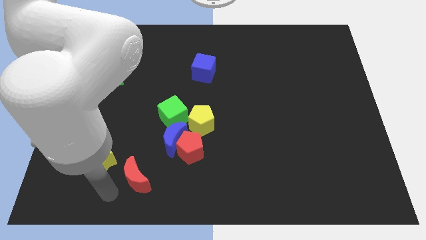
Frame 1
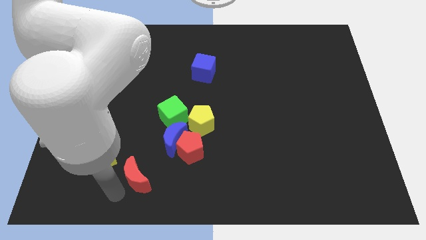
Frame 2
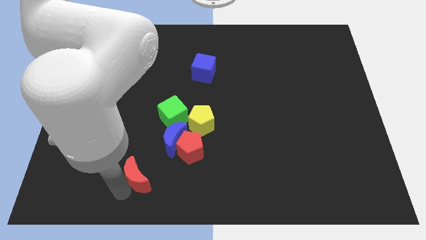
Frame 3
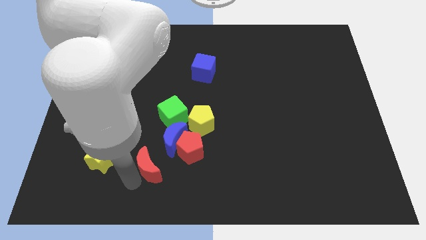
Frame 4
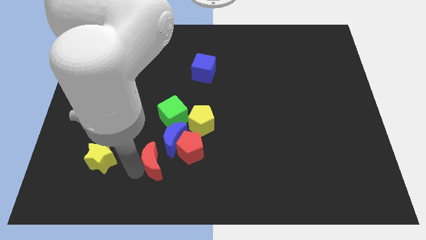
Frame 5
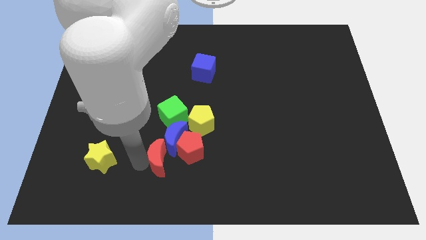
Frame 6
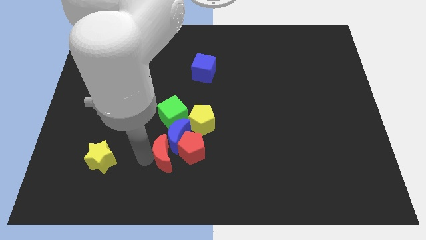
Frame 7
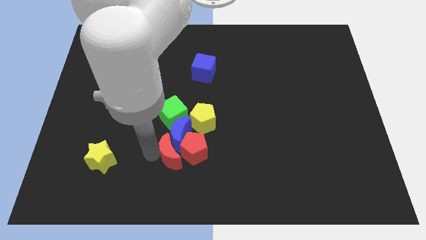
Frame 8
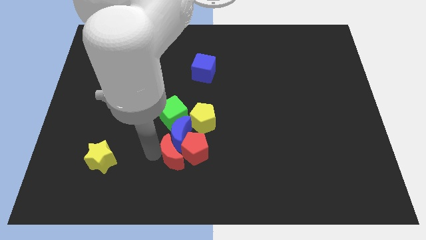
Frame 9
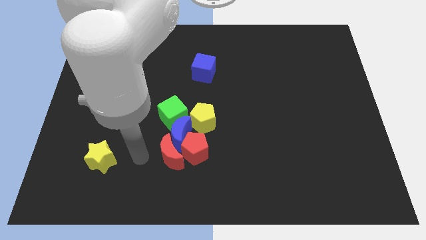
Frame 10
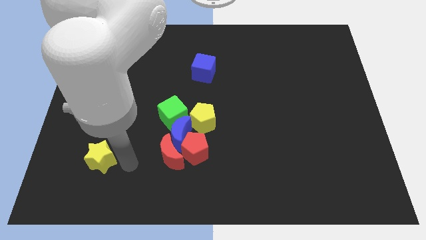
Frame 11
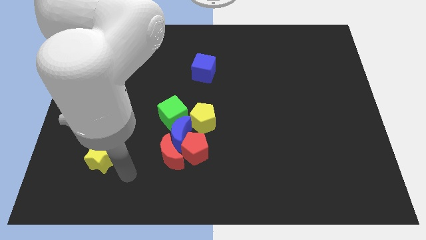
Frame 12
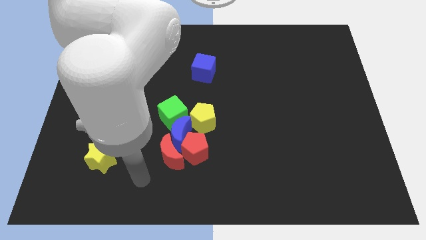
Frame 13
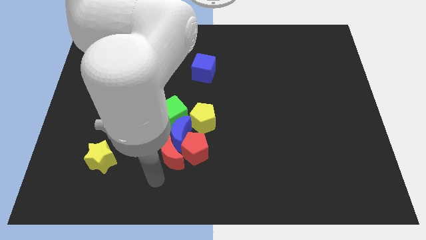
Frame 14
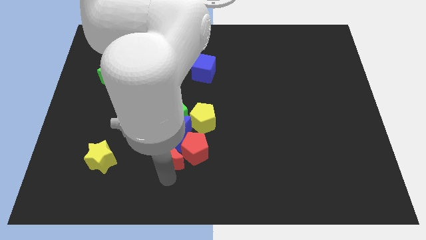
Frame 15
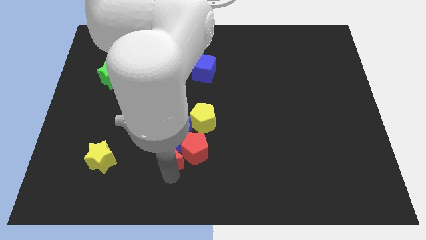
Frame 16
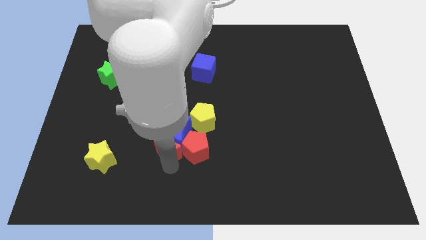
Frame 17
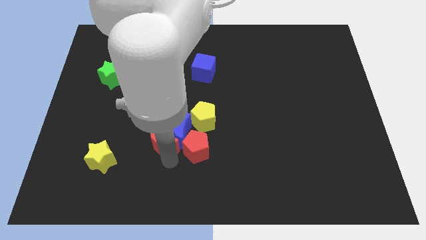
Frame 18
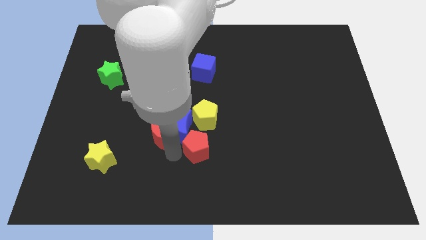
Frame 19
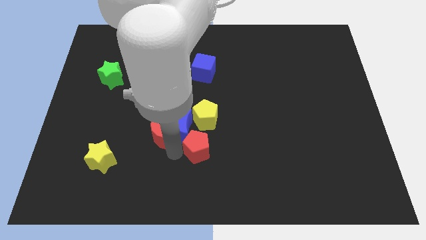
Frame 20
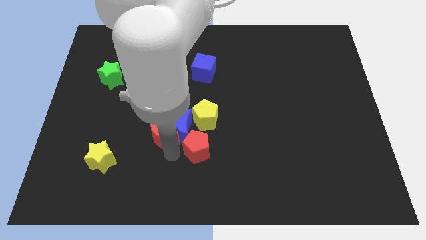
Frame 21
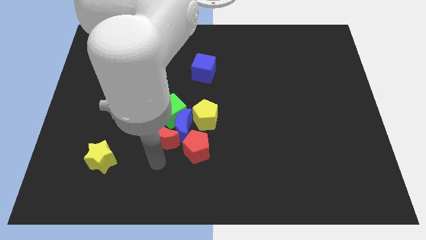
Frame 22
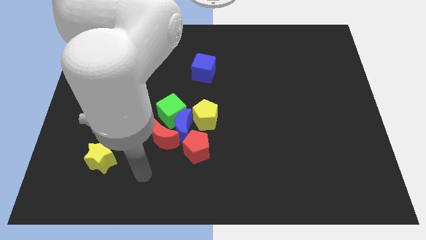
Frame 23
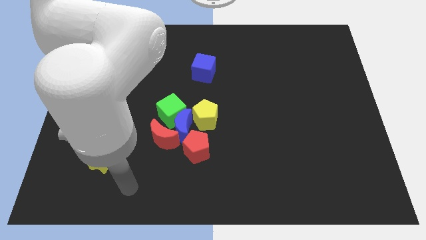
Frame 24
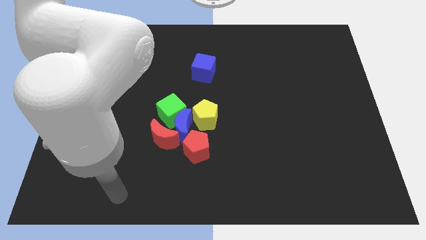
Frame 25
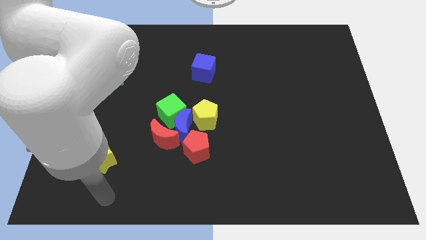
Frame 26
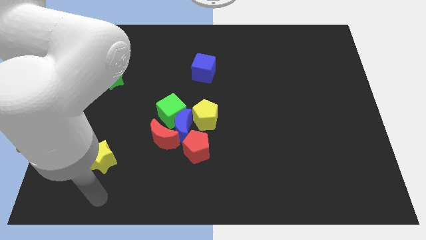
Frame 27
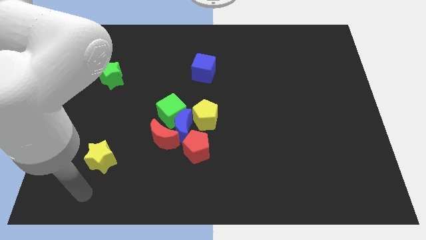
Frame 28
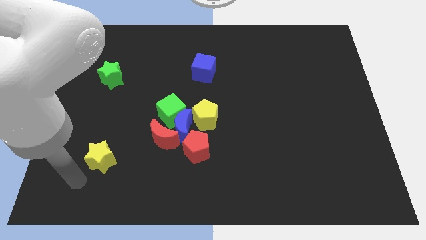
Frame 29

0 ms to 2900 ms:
push the red moon into the blue moon

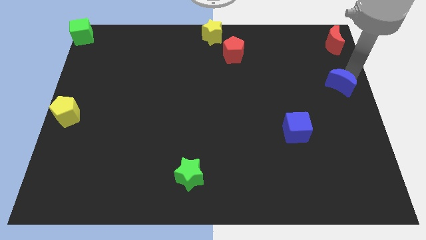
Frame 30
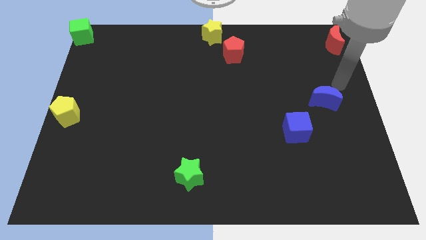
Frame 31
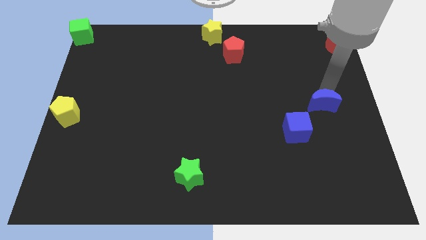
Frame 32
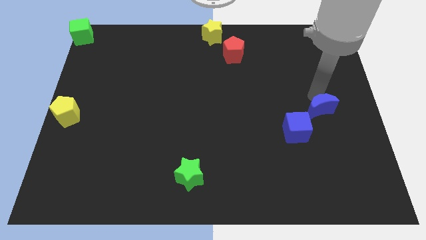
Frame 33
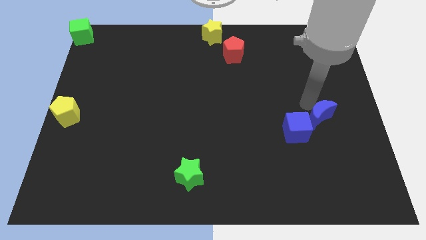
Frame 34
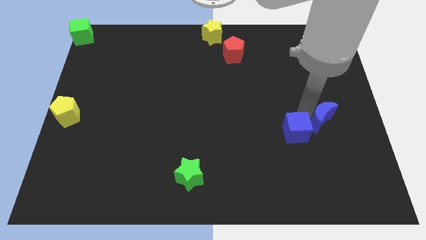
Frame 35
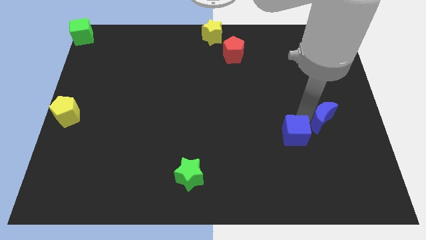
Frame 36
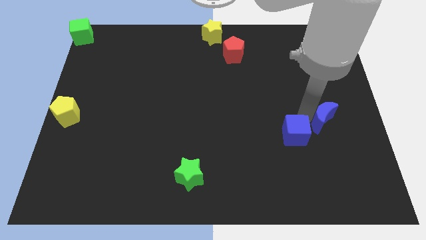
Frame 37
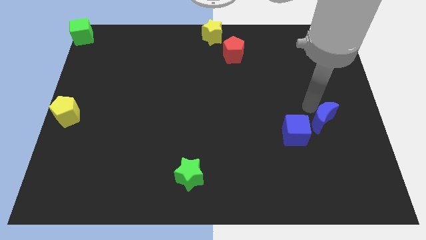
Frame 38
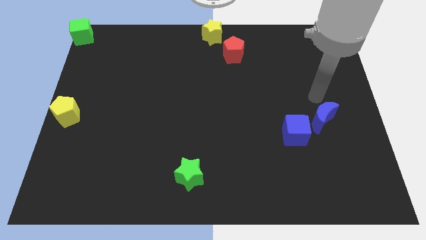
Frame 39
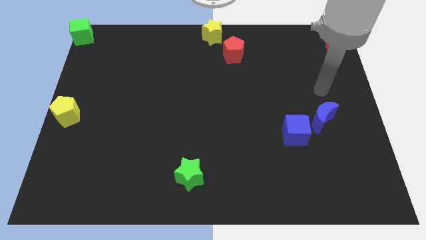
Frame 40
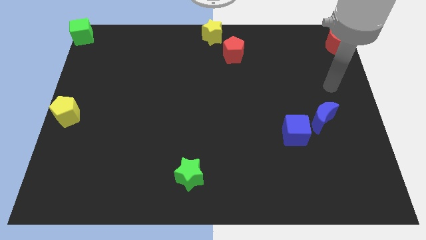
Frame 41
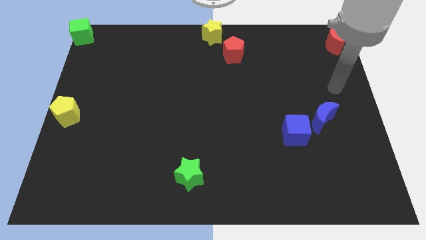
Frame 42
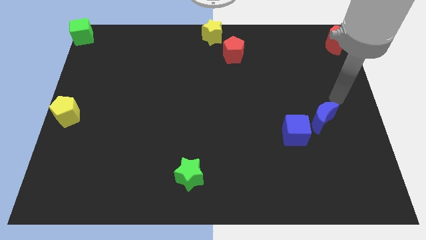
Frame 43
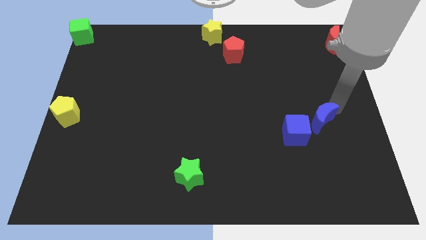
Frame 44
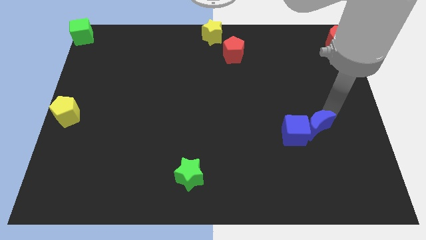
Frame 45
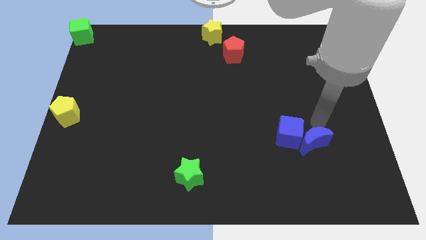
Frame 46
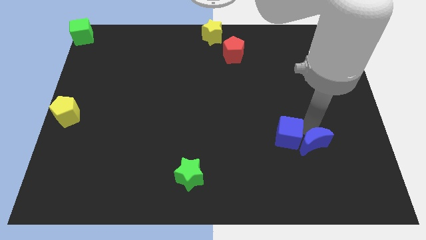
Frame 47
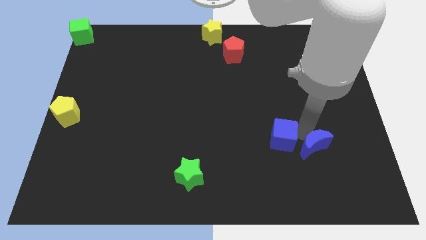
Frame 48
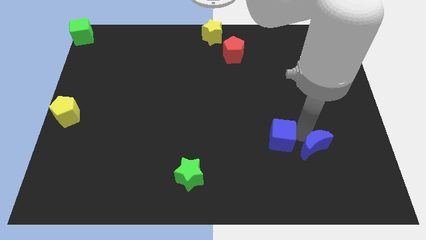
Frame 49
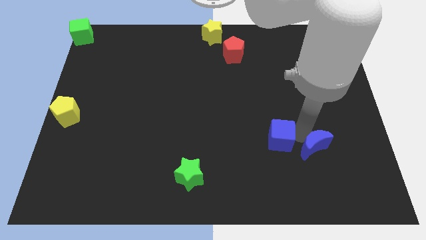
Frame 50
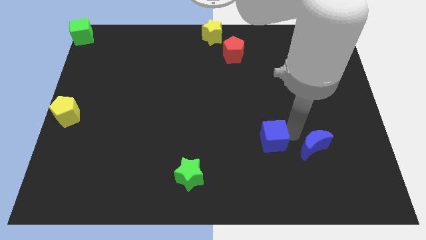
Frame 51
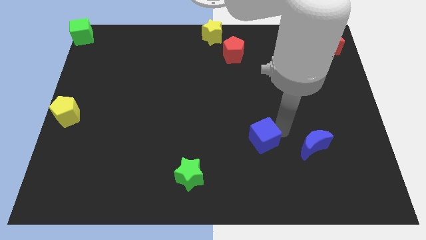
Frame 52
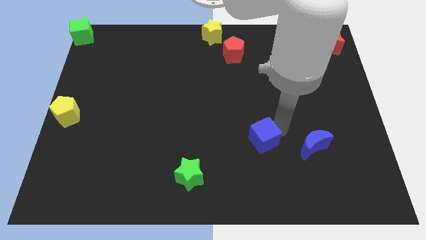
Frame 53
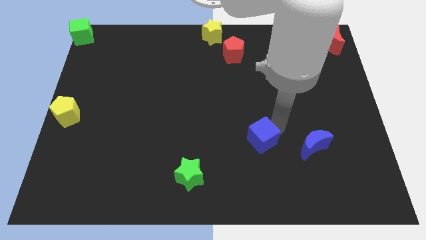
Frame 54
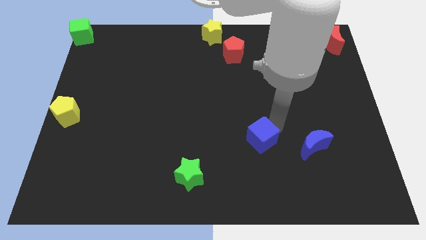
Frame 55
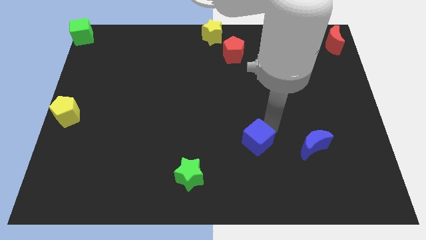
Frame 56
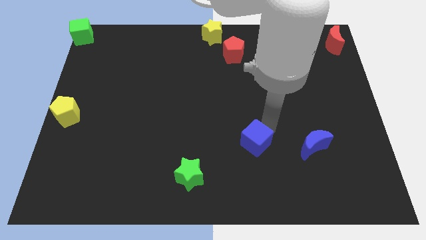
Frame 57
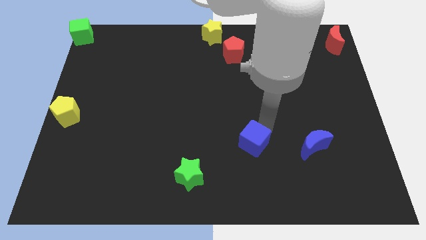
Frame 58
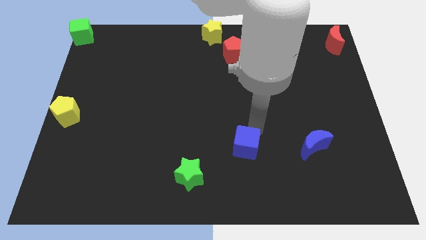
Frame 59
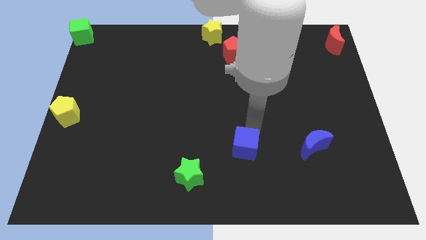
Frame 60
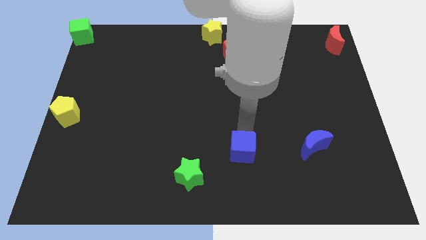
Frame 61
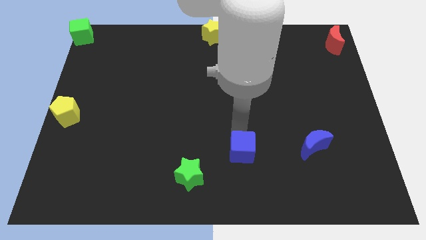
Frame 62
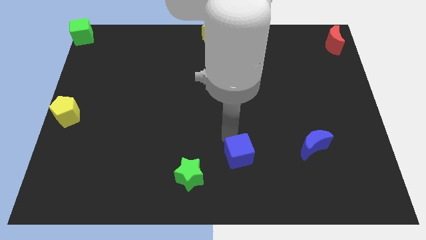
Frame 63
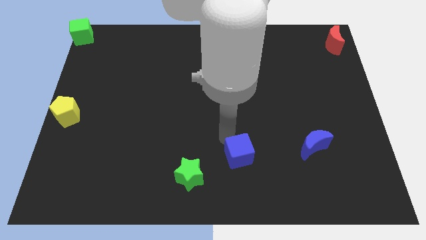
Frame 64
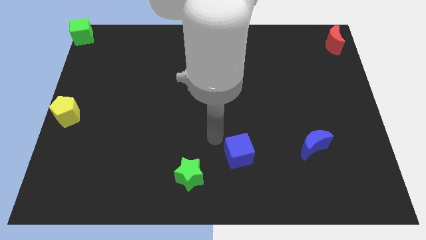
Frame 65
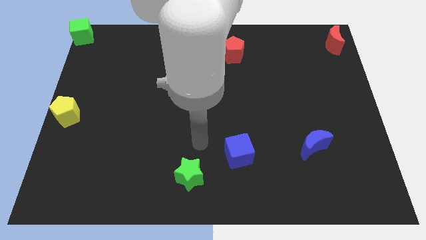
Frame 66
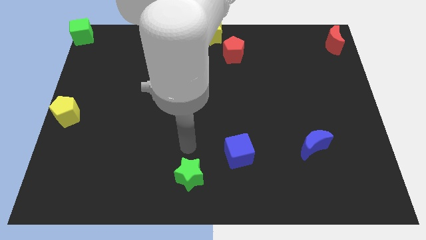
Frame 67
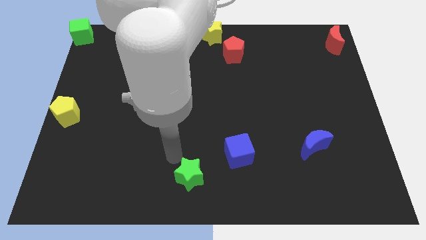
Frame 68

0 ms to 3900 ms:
place the blue cube in between the blue crescent and green star

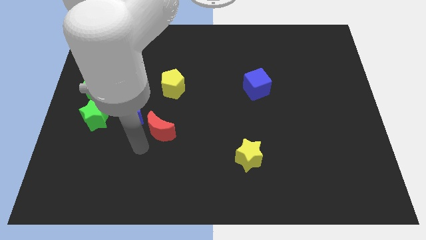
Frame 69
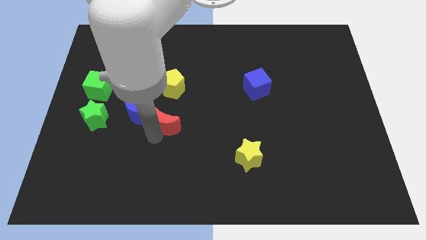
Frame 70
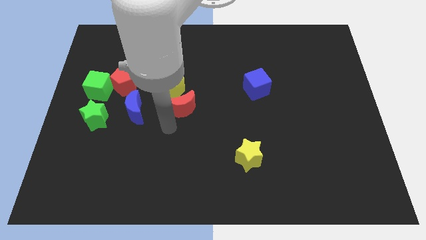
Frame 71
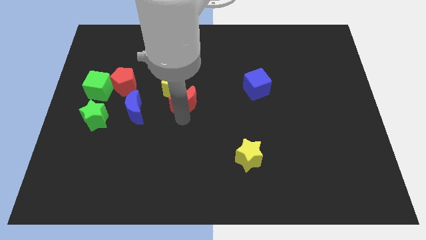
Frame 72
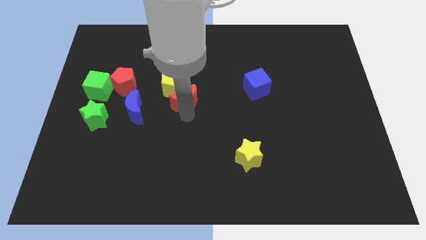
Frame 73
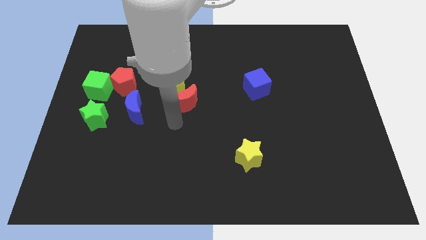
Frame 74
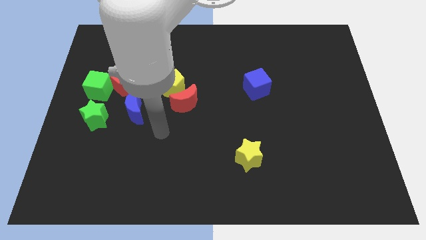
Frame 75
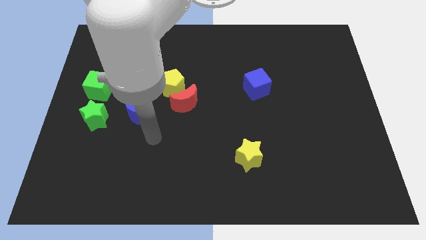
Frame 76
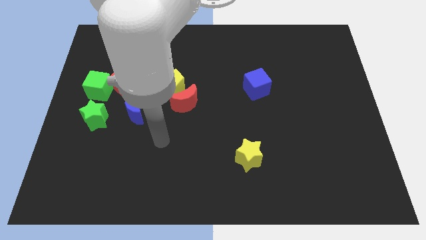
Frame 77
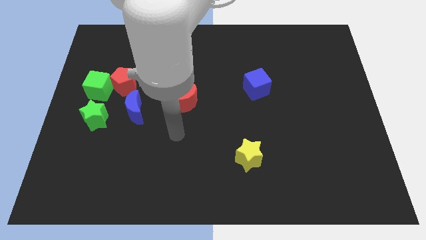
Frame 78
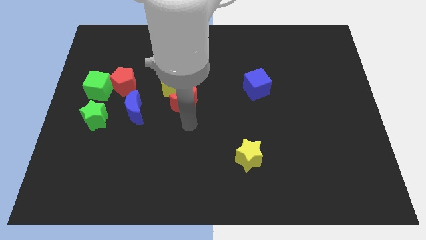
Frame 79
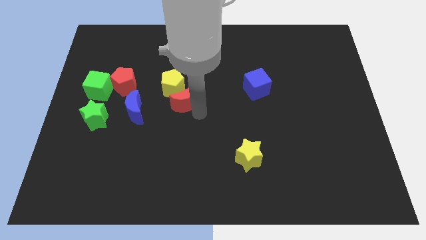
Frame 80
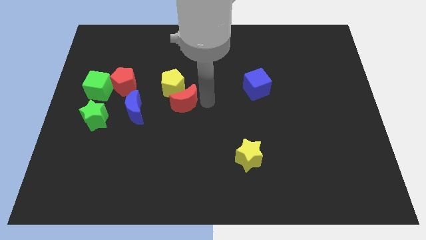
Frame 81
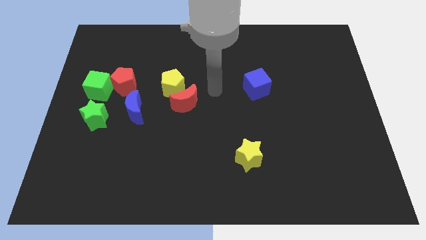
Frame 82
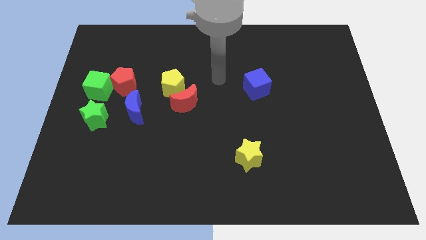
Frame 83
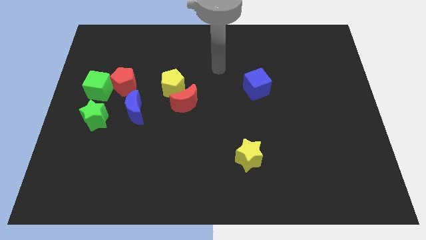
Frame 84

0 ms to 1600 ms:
move the red crescent towards the yellow pentagon

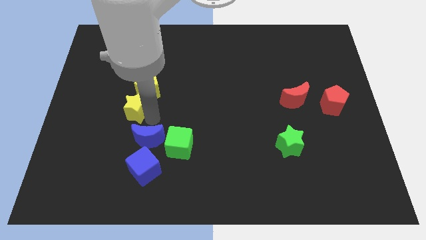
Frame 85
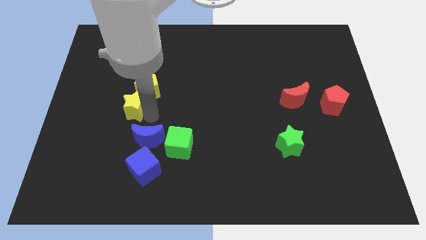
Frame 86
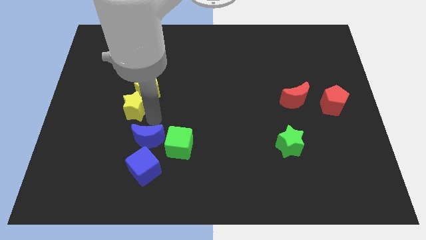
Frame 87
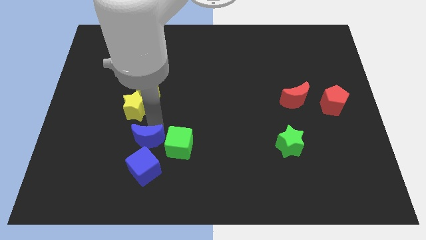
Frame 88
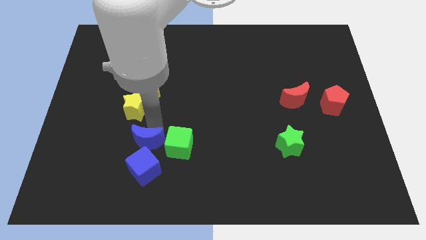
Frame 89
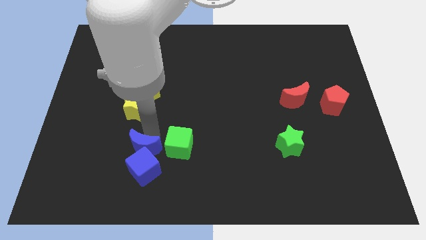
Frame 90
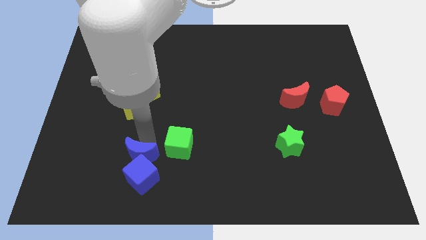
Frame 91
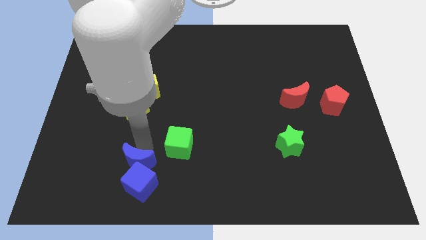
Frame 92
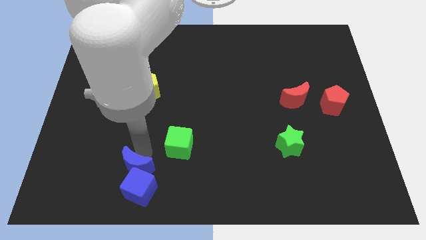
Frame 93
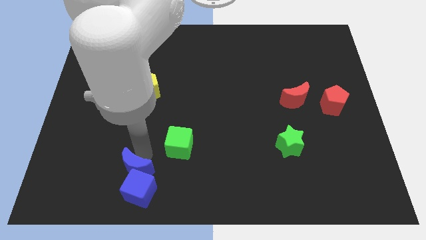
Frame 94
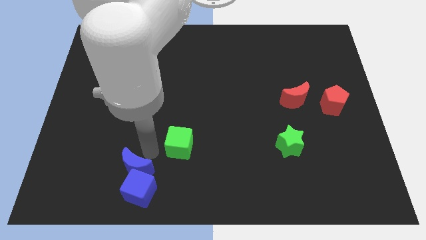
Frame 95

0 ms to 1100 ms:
push the blue blocks to the bottom
